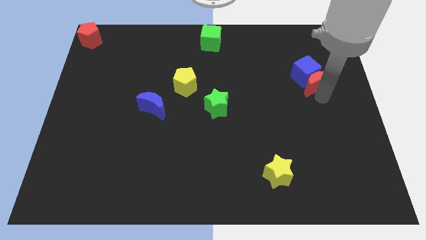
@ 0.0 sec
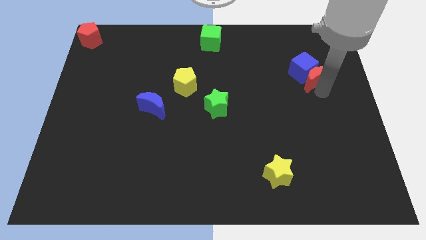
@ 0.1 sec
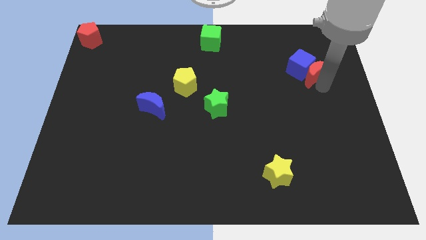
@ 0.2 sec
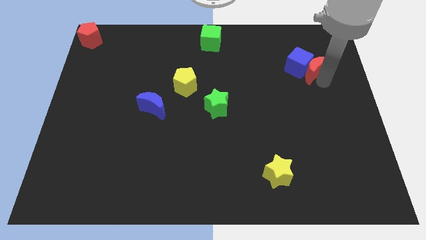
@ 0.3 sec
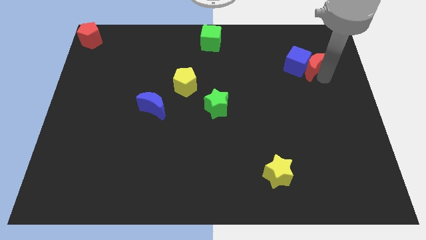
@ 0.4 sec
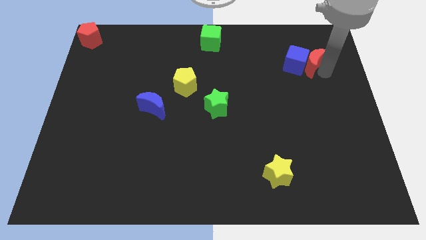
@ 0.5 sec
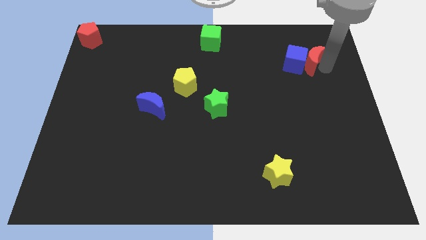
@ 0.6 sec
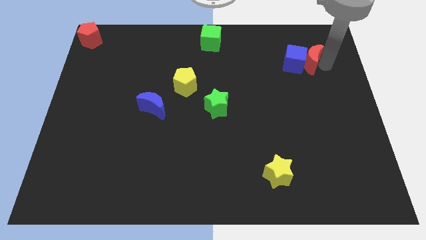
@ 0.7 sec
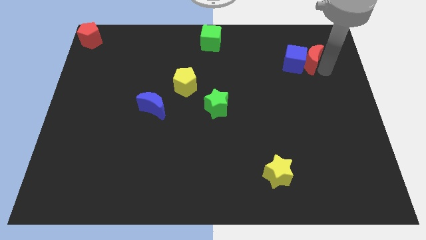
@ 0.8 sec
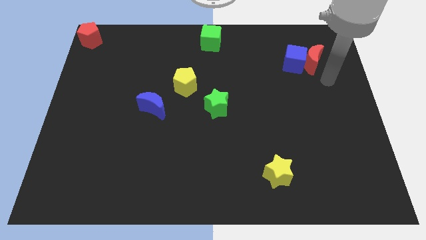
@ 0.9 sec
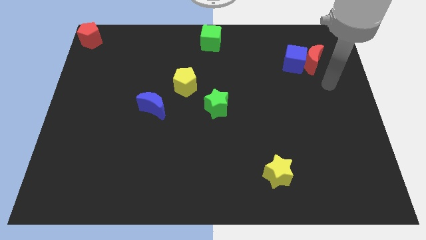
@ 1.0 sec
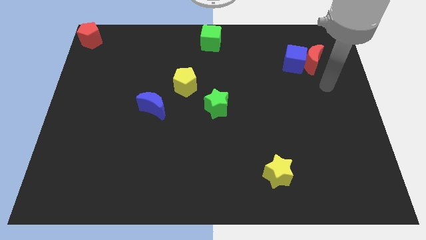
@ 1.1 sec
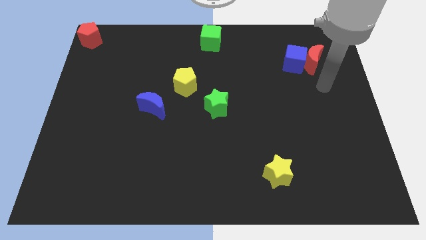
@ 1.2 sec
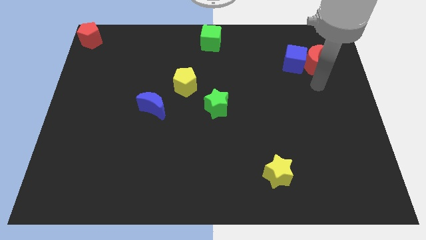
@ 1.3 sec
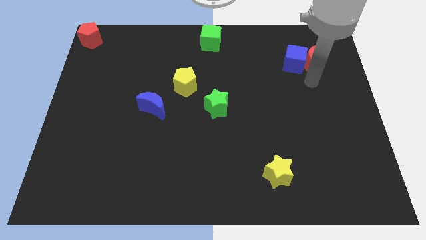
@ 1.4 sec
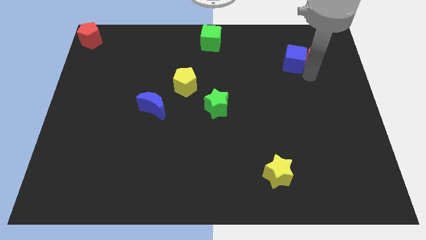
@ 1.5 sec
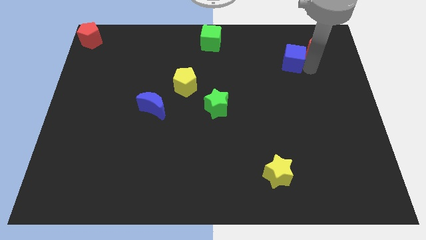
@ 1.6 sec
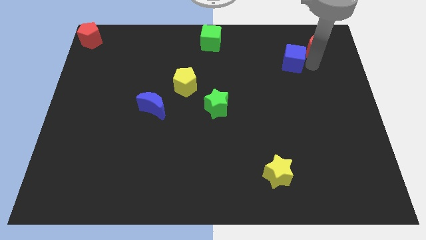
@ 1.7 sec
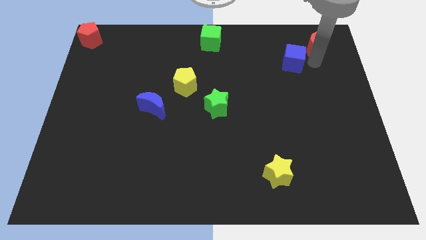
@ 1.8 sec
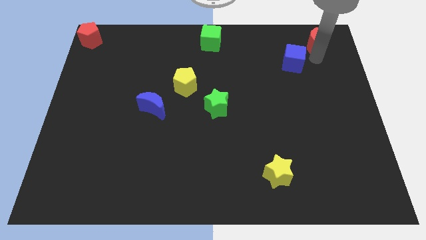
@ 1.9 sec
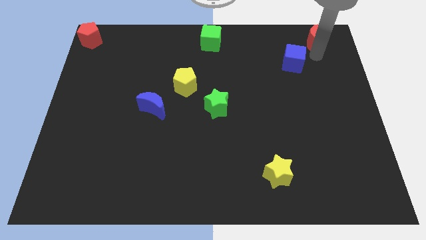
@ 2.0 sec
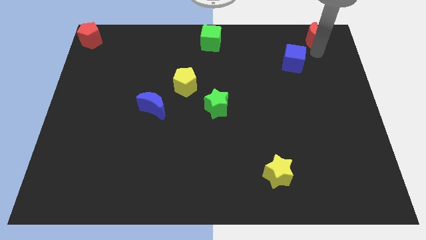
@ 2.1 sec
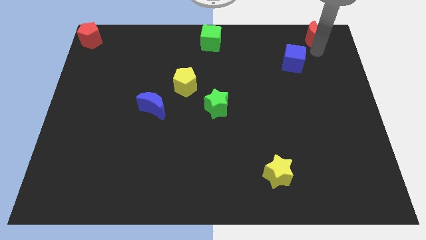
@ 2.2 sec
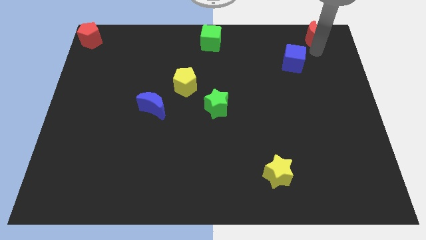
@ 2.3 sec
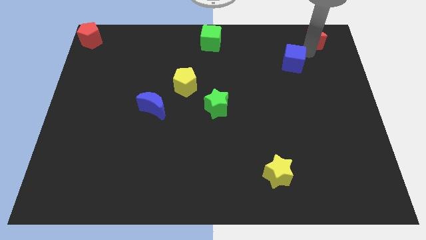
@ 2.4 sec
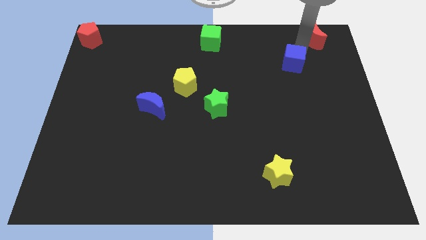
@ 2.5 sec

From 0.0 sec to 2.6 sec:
separate the red moon from the blue cube

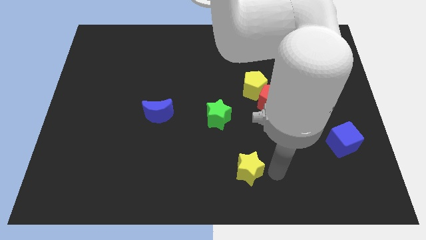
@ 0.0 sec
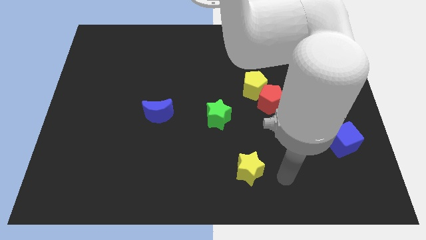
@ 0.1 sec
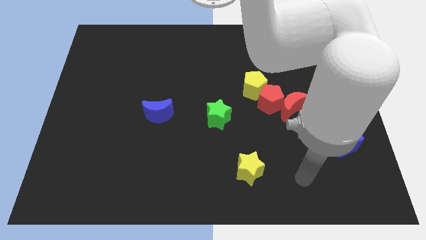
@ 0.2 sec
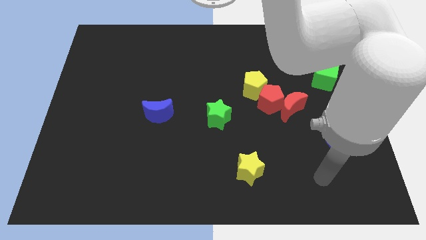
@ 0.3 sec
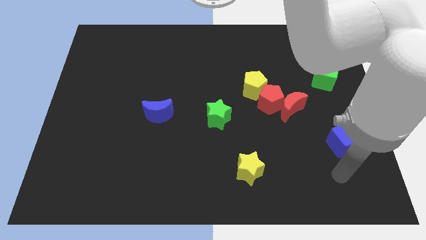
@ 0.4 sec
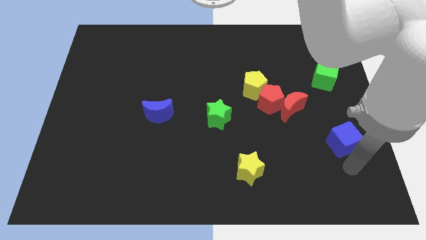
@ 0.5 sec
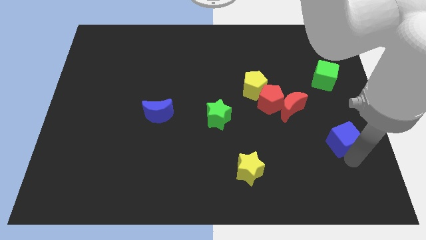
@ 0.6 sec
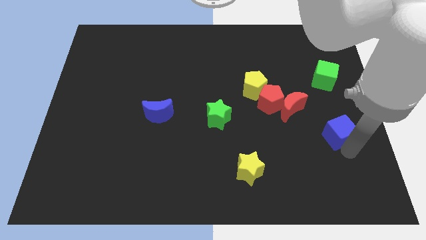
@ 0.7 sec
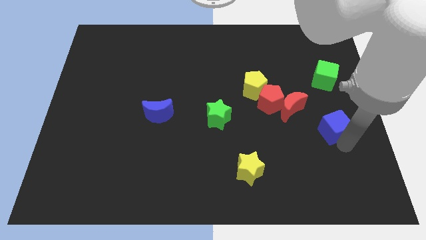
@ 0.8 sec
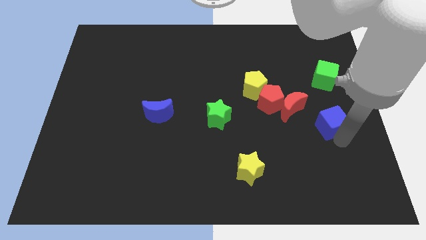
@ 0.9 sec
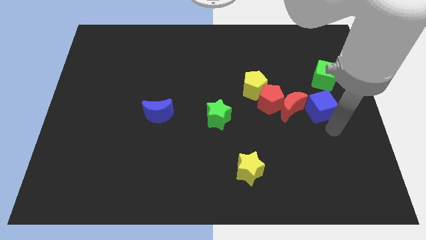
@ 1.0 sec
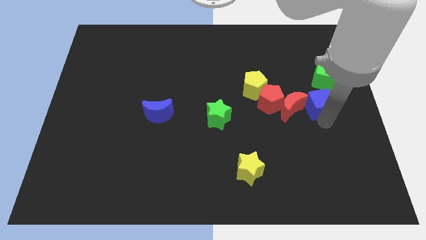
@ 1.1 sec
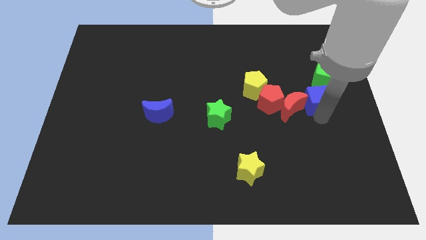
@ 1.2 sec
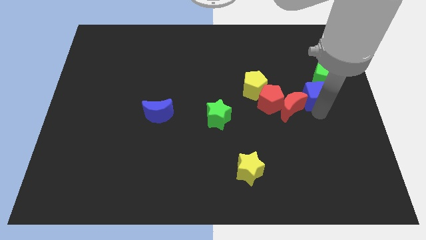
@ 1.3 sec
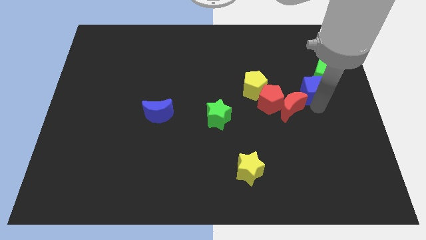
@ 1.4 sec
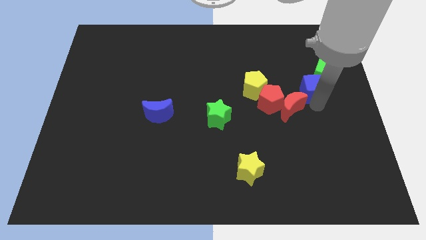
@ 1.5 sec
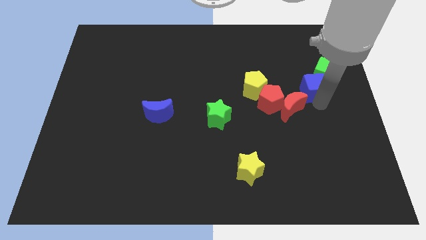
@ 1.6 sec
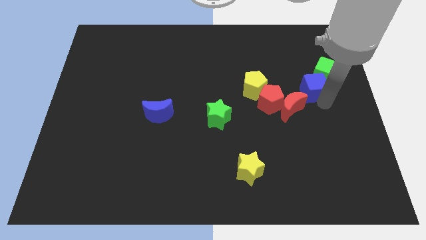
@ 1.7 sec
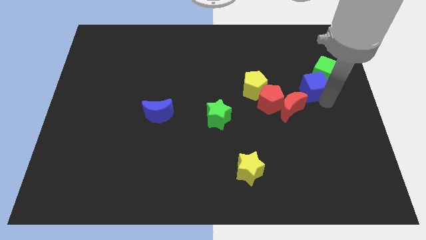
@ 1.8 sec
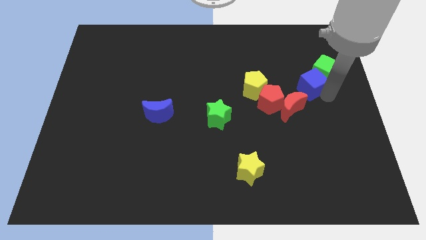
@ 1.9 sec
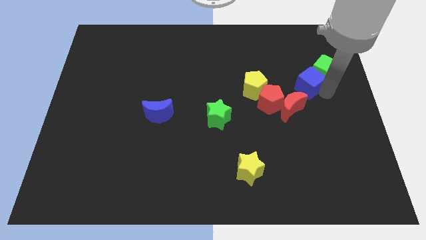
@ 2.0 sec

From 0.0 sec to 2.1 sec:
push the blue cube into the green cube

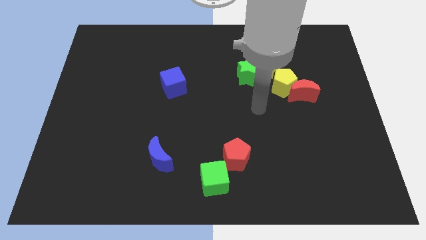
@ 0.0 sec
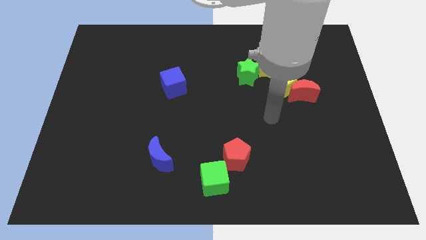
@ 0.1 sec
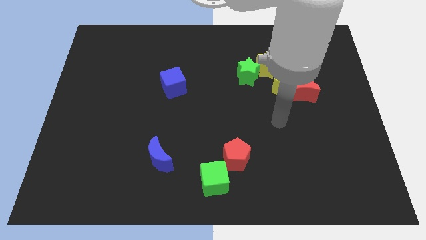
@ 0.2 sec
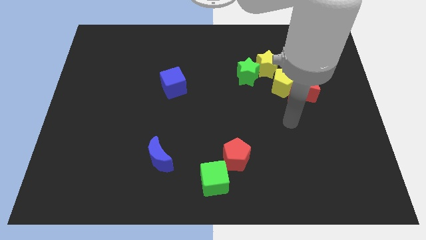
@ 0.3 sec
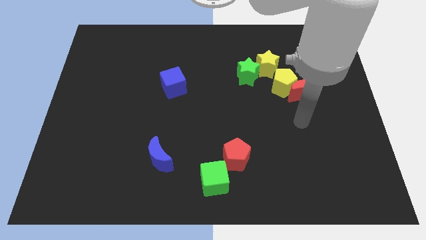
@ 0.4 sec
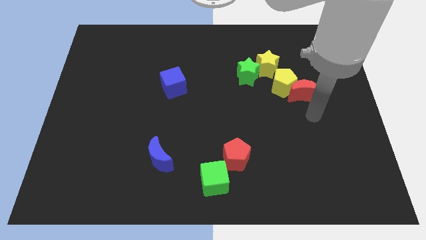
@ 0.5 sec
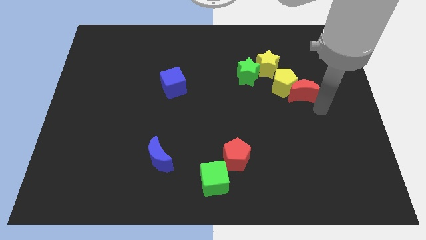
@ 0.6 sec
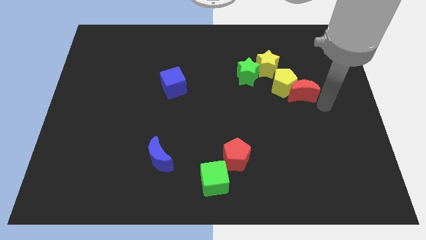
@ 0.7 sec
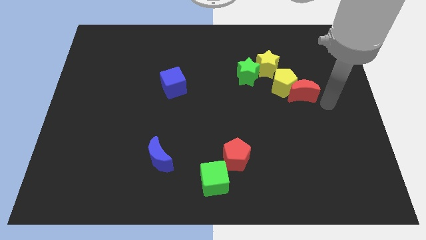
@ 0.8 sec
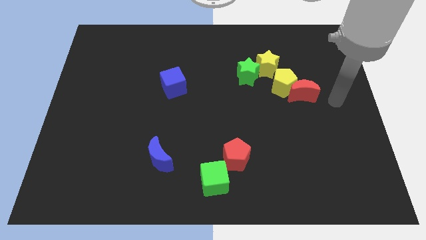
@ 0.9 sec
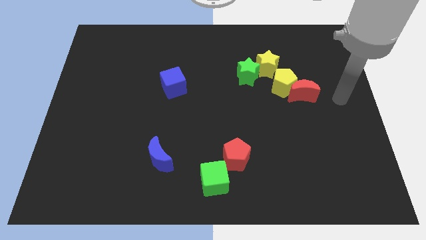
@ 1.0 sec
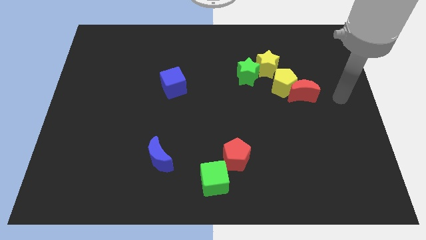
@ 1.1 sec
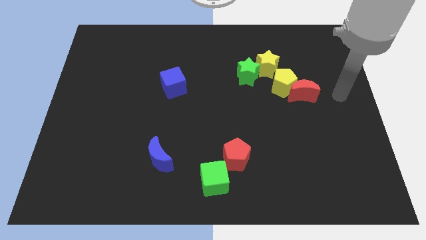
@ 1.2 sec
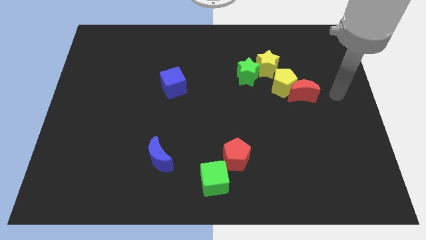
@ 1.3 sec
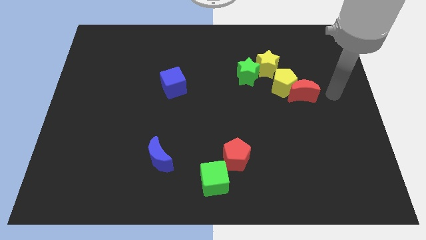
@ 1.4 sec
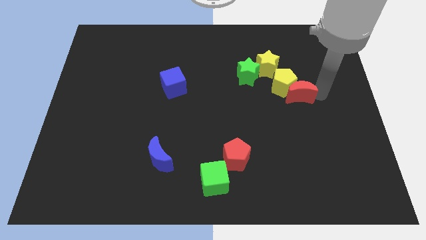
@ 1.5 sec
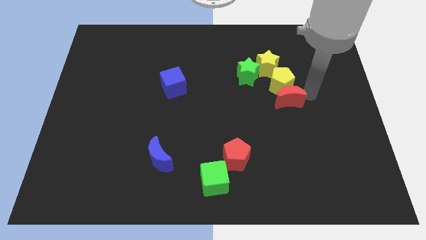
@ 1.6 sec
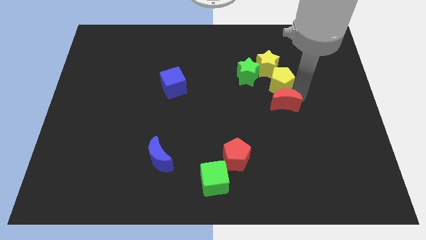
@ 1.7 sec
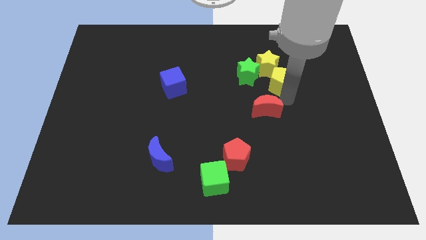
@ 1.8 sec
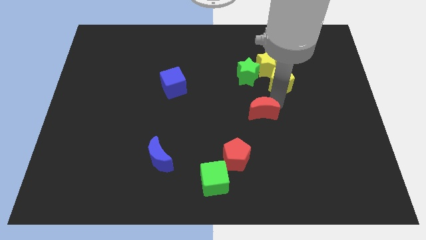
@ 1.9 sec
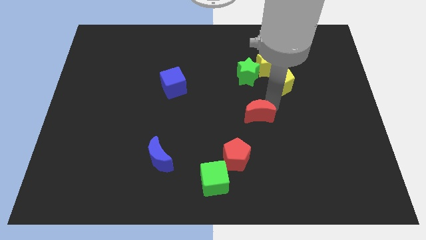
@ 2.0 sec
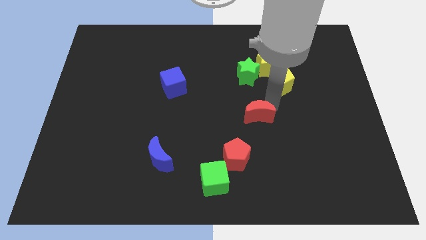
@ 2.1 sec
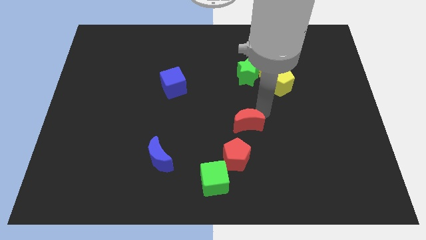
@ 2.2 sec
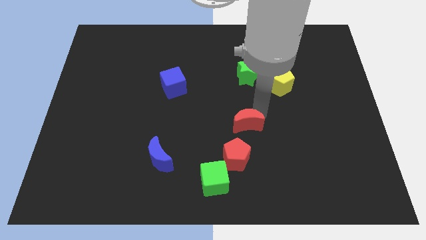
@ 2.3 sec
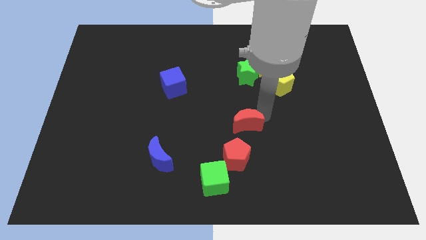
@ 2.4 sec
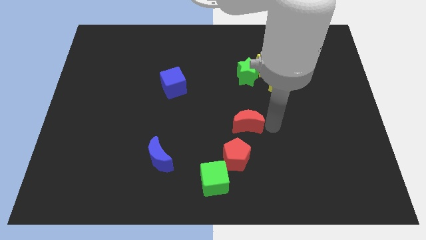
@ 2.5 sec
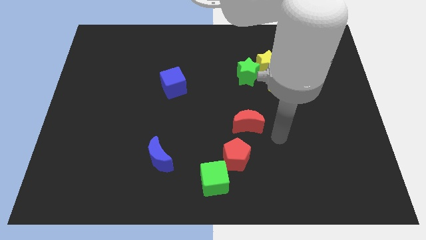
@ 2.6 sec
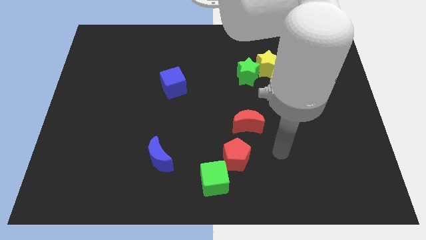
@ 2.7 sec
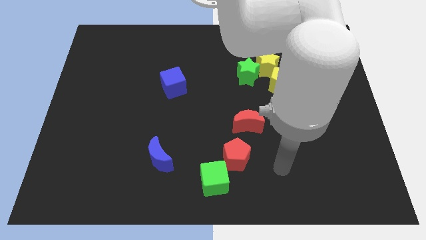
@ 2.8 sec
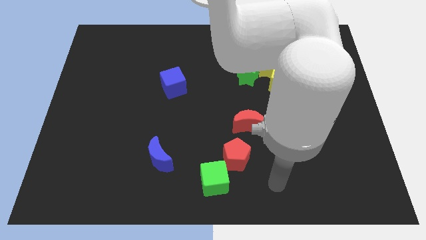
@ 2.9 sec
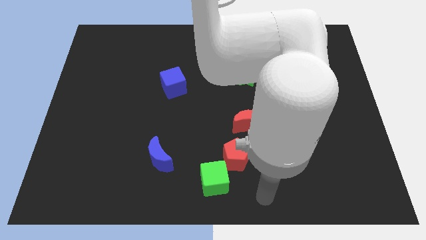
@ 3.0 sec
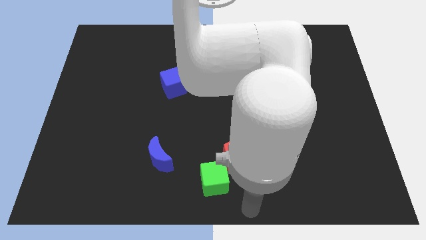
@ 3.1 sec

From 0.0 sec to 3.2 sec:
separate red moon from the yellow pentagon

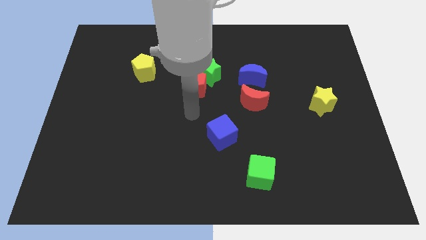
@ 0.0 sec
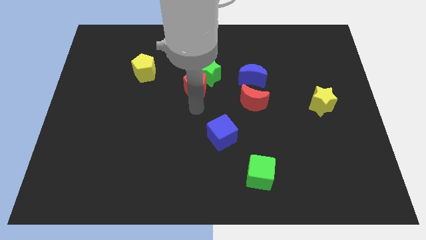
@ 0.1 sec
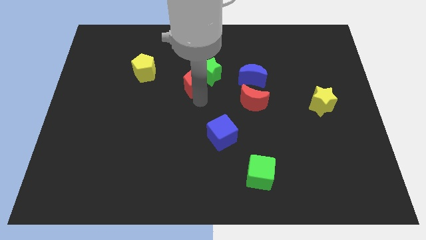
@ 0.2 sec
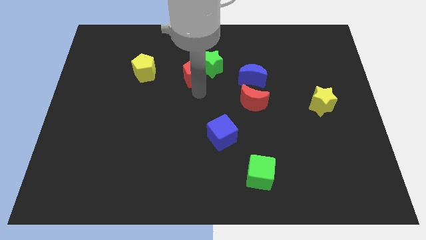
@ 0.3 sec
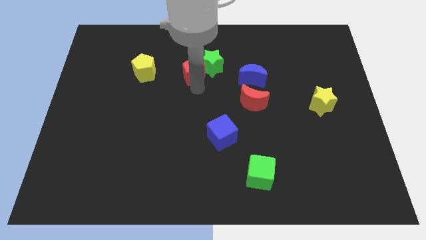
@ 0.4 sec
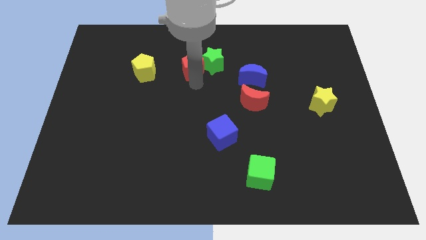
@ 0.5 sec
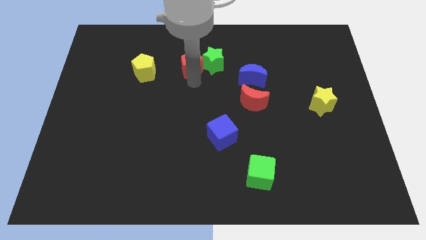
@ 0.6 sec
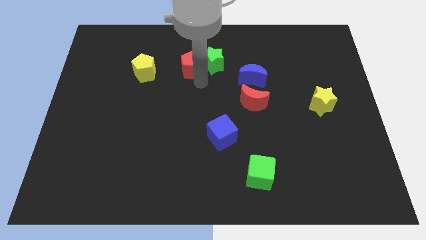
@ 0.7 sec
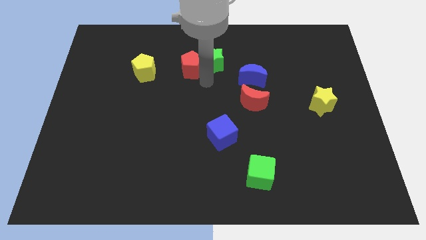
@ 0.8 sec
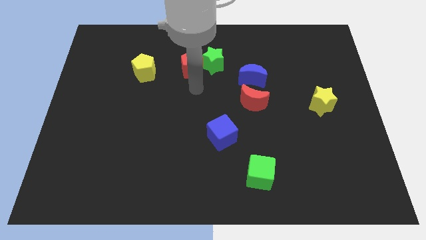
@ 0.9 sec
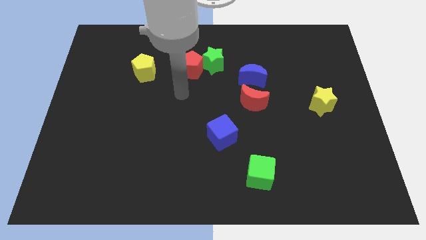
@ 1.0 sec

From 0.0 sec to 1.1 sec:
slightly push the red pentagon into the the green star towards upwards
